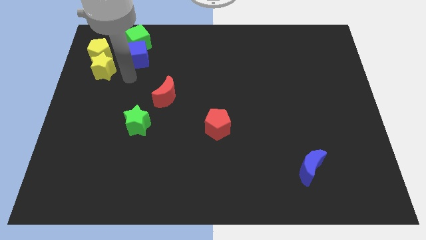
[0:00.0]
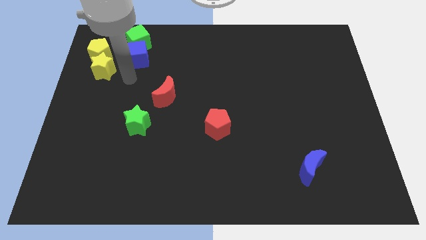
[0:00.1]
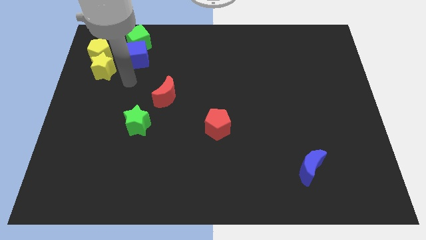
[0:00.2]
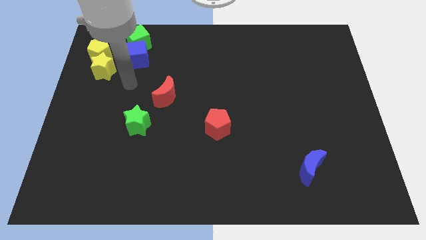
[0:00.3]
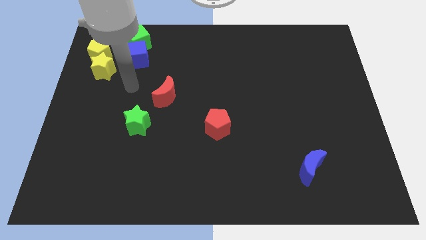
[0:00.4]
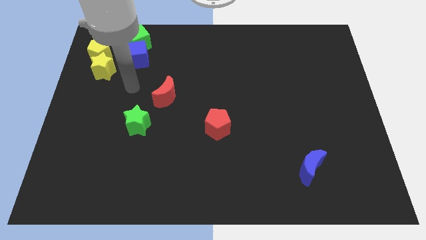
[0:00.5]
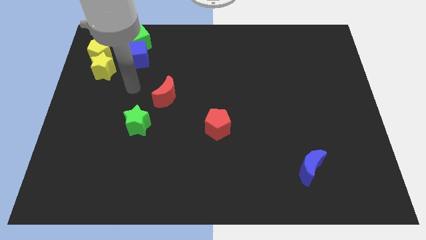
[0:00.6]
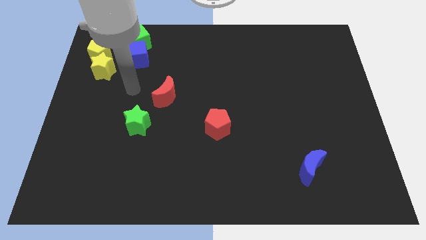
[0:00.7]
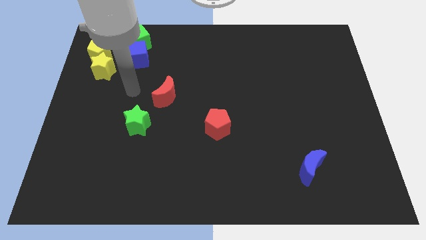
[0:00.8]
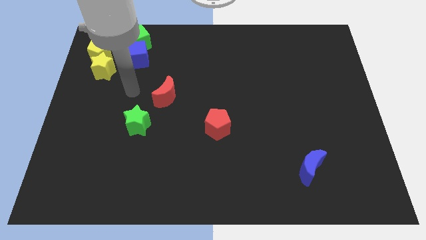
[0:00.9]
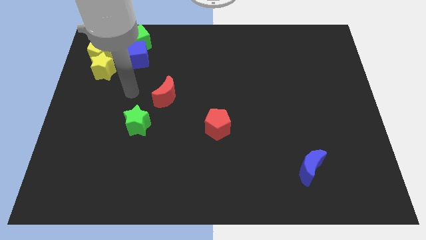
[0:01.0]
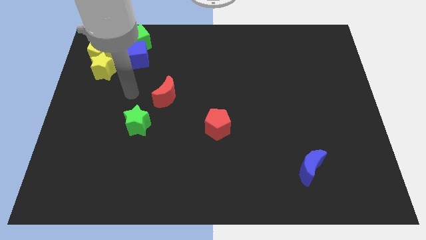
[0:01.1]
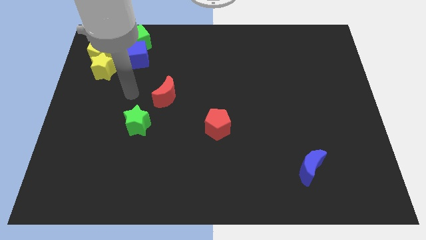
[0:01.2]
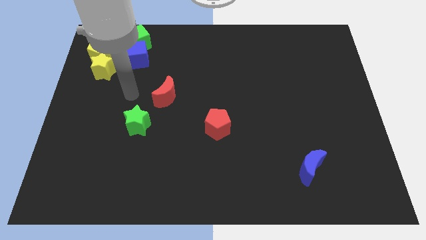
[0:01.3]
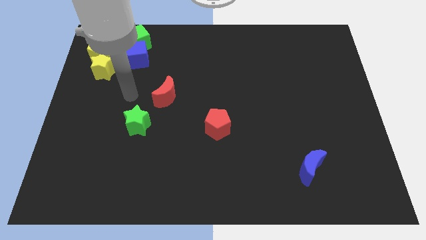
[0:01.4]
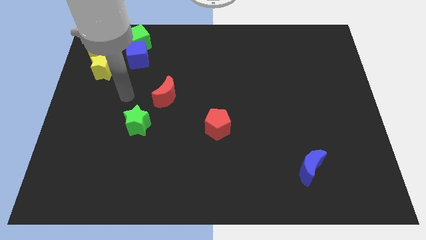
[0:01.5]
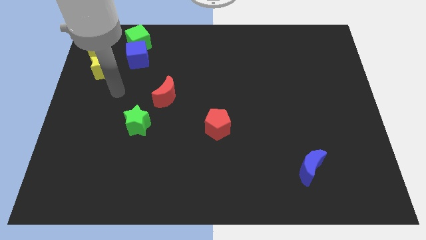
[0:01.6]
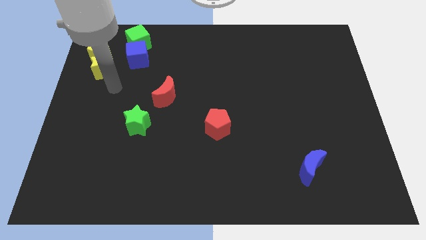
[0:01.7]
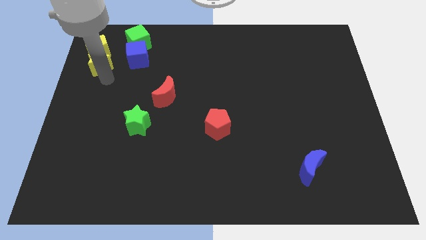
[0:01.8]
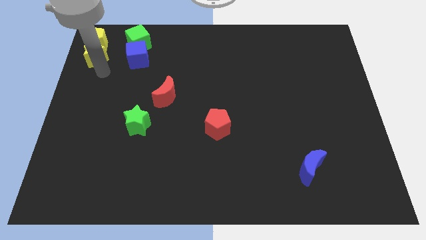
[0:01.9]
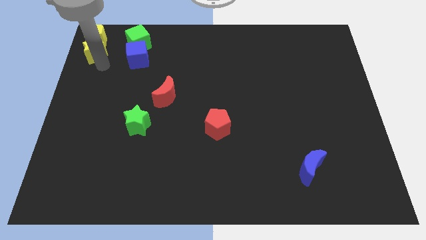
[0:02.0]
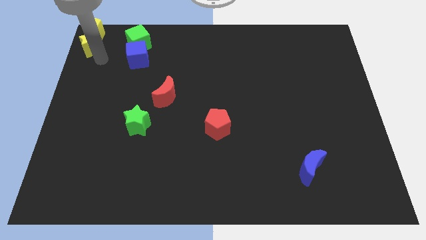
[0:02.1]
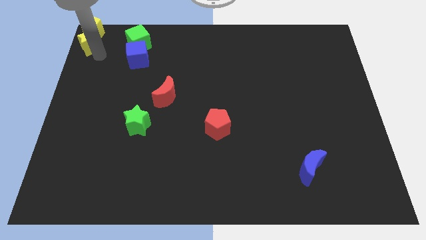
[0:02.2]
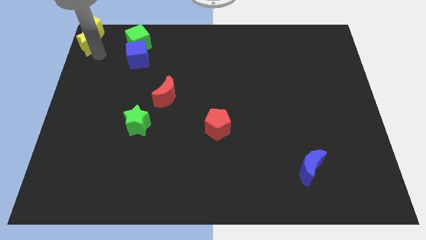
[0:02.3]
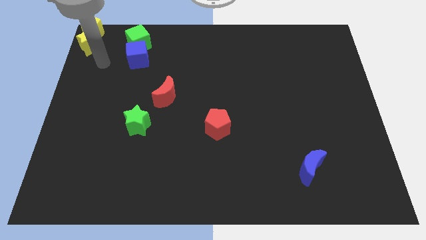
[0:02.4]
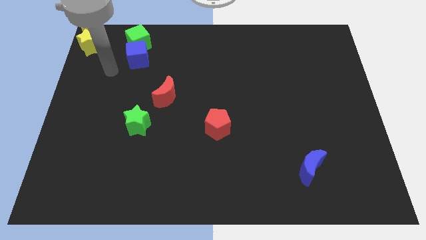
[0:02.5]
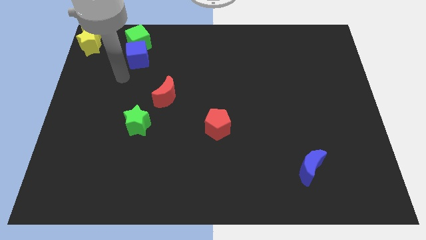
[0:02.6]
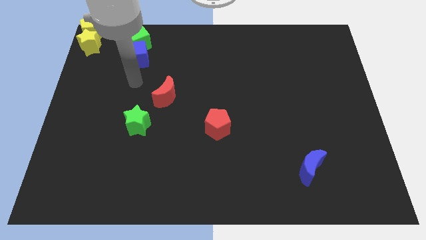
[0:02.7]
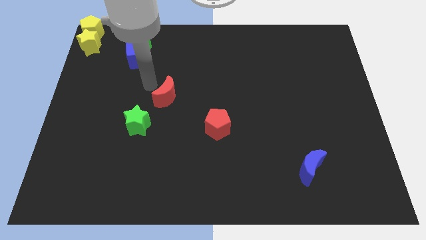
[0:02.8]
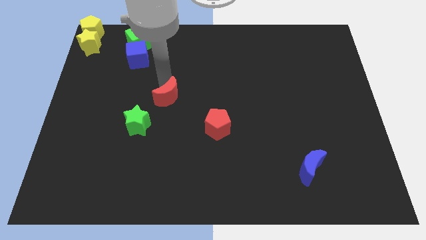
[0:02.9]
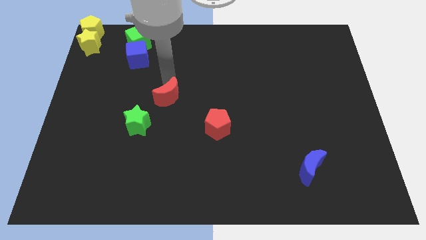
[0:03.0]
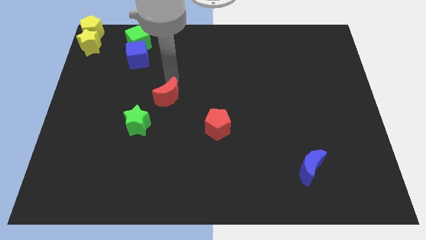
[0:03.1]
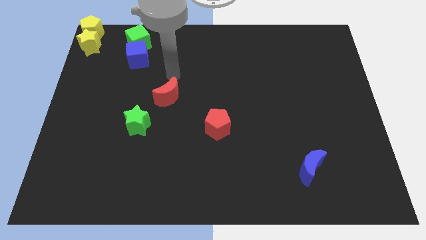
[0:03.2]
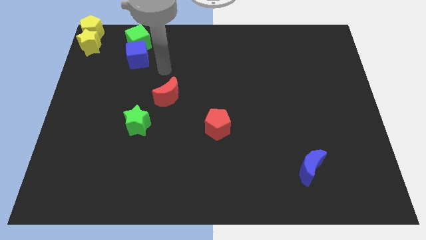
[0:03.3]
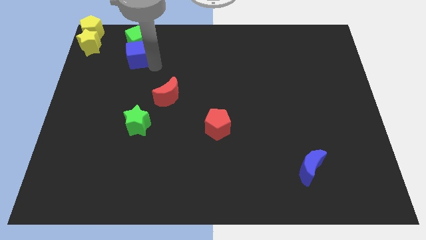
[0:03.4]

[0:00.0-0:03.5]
push the yellow star and yellow pentagon to the top left corner of the board

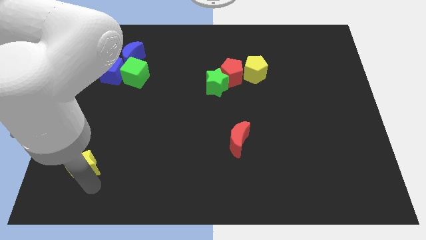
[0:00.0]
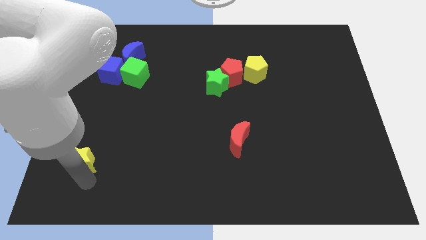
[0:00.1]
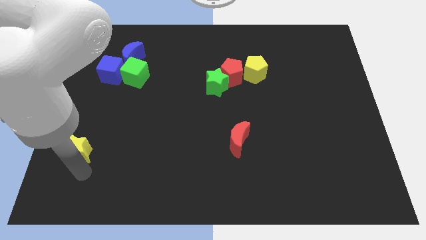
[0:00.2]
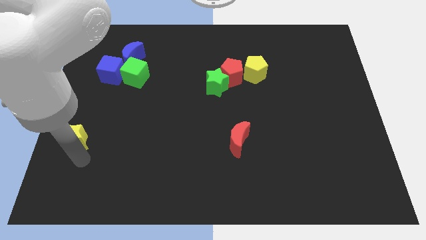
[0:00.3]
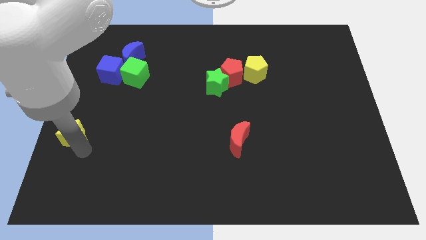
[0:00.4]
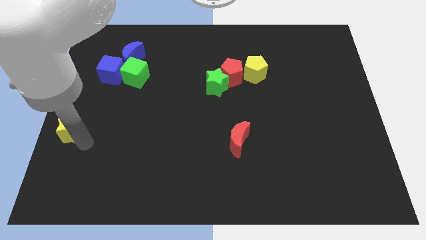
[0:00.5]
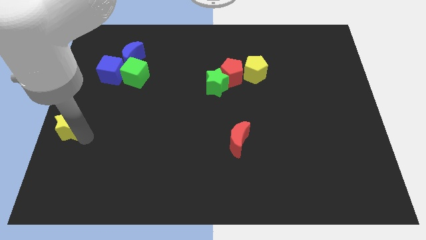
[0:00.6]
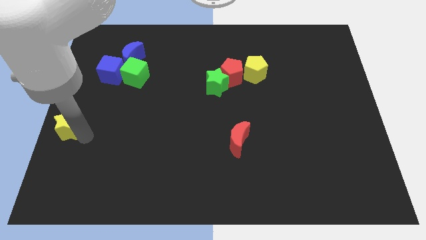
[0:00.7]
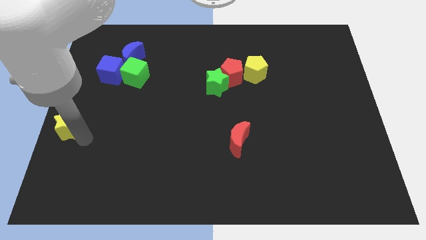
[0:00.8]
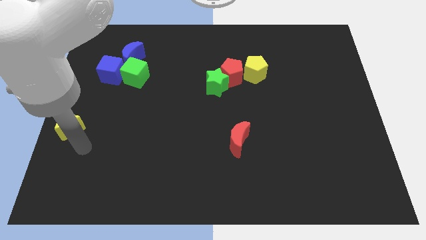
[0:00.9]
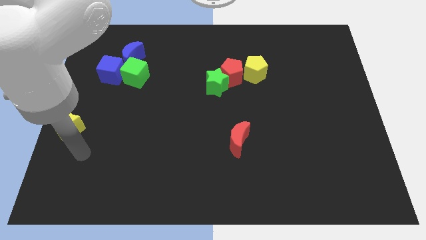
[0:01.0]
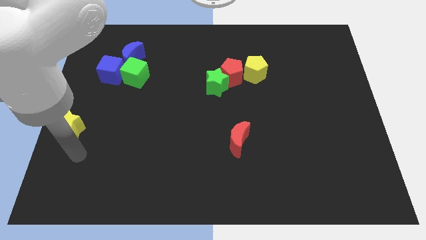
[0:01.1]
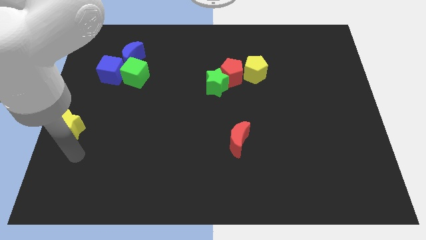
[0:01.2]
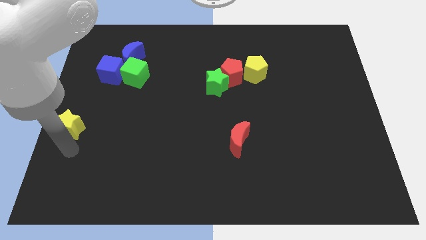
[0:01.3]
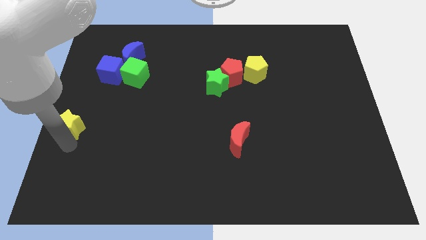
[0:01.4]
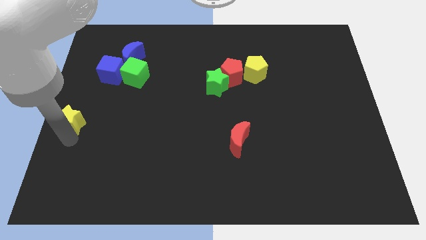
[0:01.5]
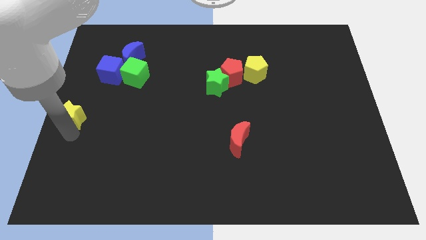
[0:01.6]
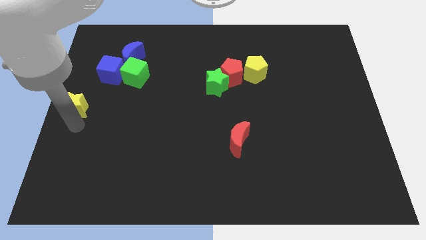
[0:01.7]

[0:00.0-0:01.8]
push the yellow star to the center left of the board

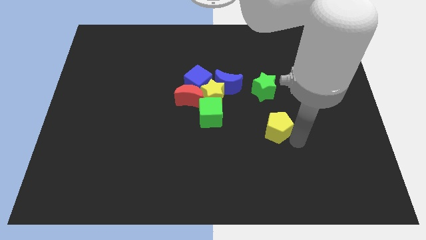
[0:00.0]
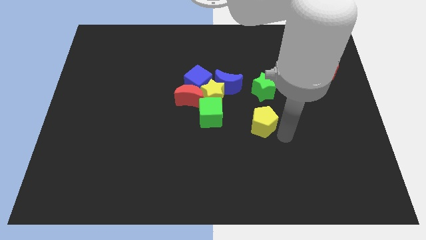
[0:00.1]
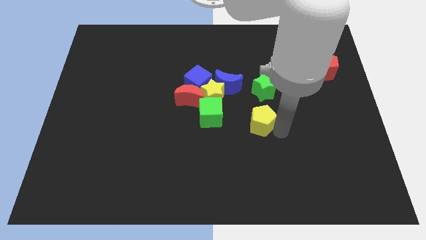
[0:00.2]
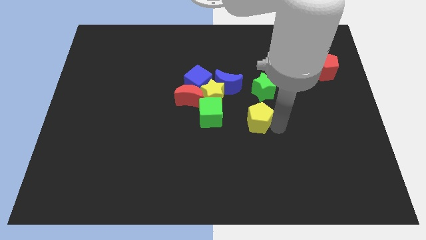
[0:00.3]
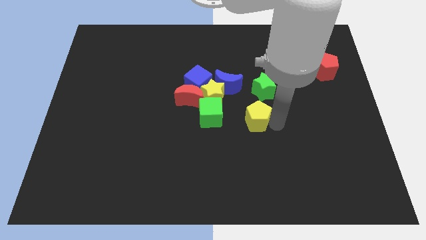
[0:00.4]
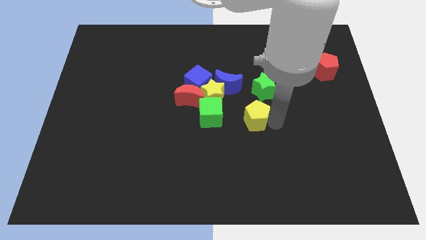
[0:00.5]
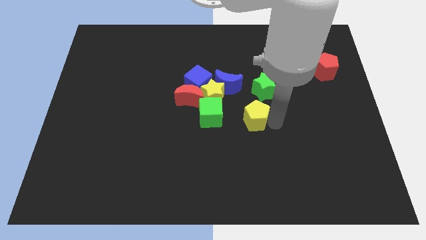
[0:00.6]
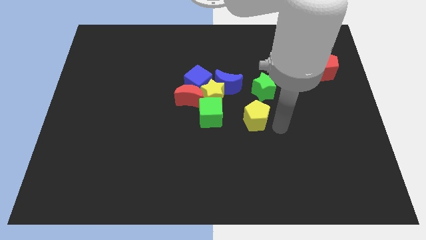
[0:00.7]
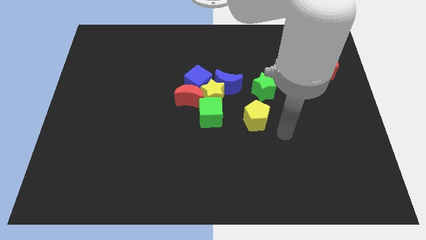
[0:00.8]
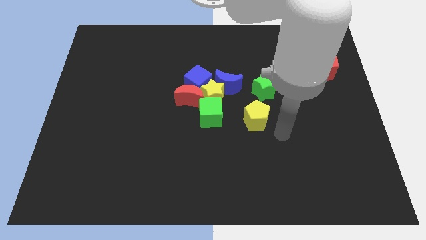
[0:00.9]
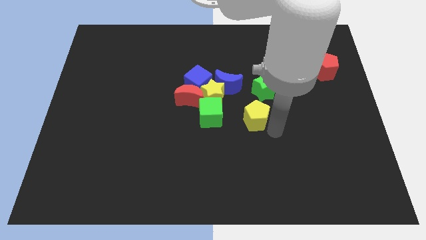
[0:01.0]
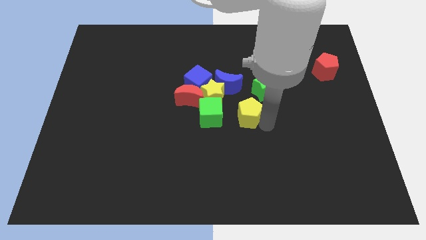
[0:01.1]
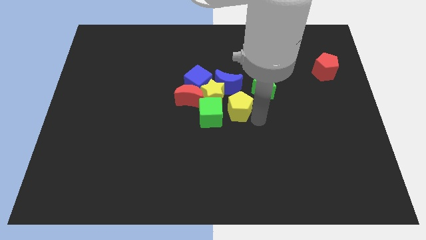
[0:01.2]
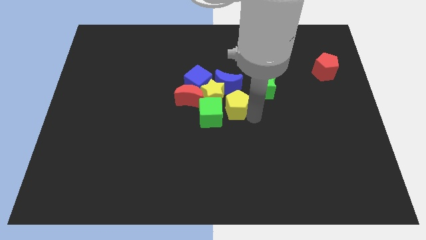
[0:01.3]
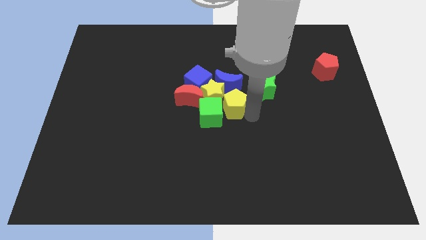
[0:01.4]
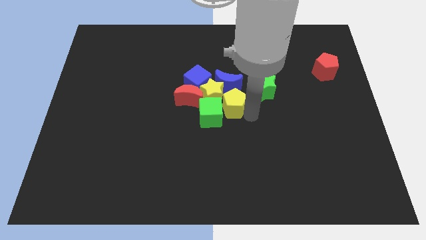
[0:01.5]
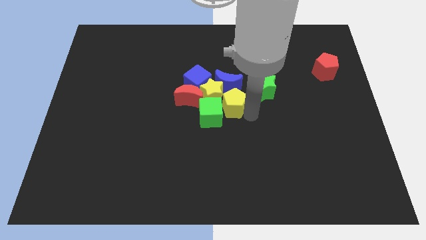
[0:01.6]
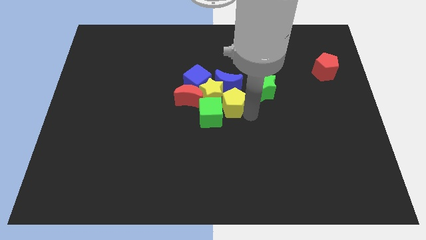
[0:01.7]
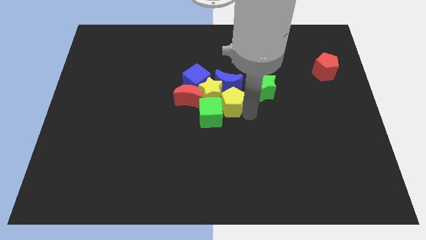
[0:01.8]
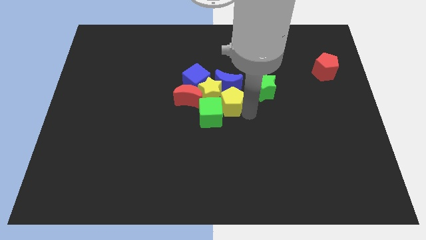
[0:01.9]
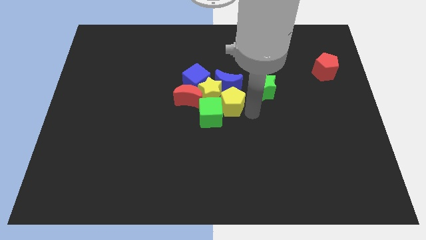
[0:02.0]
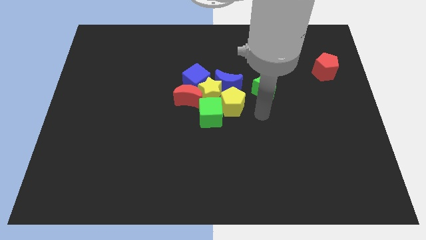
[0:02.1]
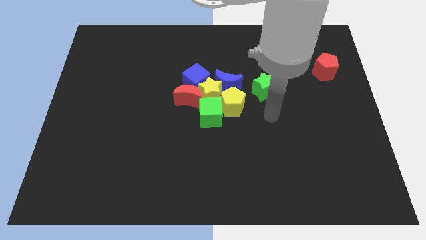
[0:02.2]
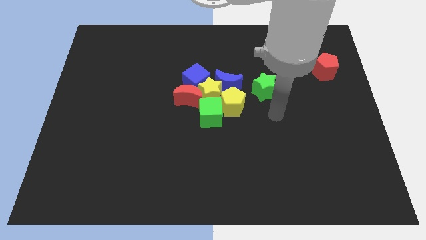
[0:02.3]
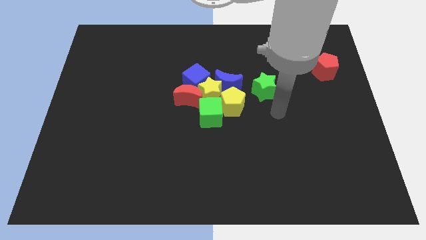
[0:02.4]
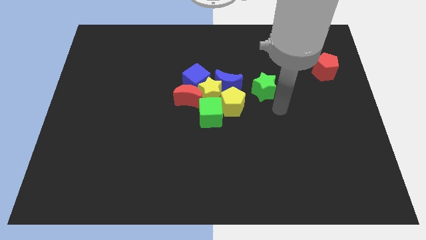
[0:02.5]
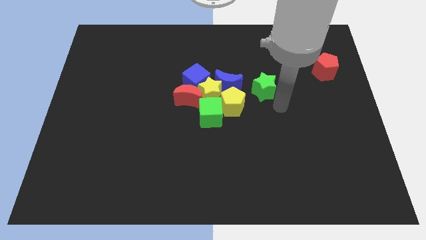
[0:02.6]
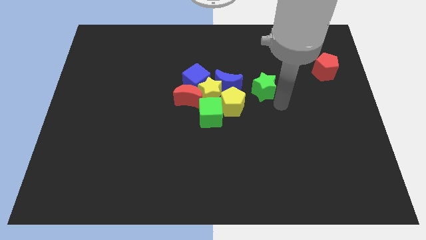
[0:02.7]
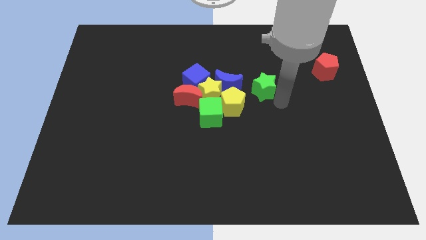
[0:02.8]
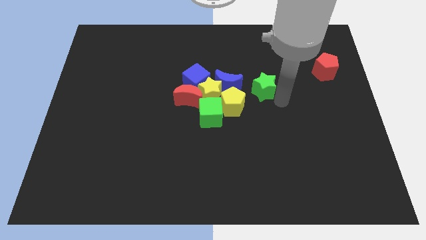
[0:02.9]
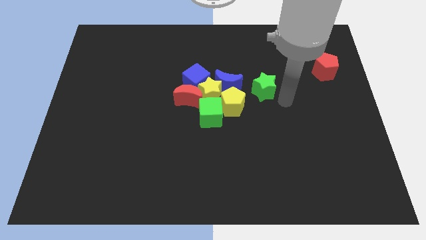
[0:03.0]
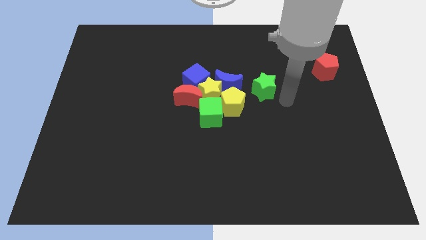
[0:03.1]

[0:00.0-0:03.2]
push the yellow pentagon into the yellow star

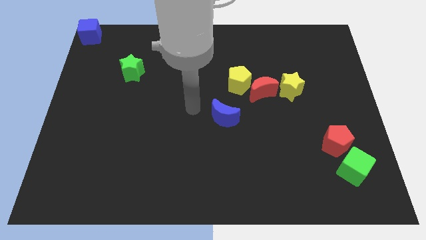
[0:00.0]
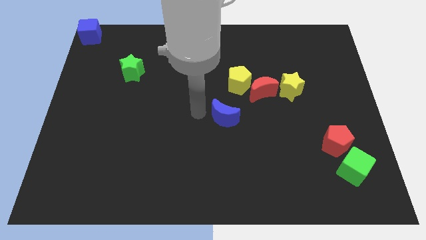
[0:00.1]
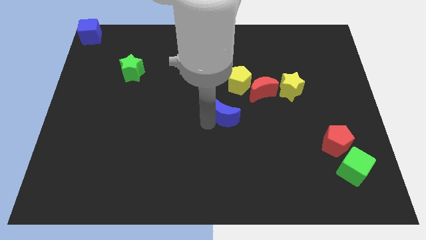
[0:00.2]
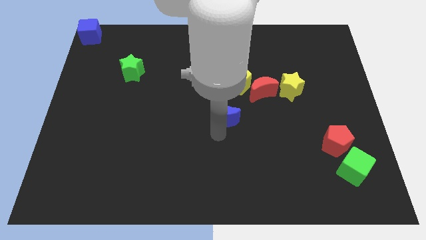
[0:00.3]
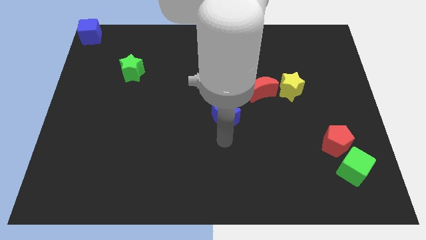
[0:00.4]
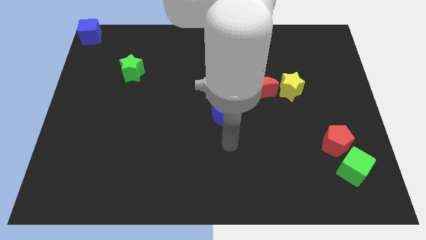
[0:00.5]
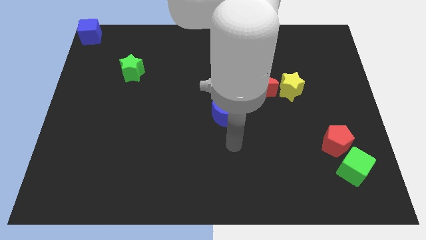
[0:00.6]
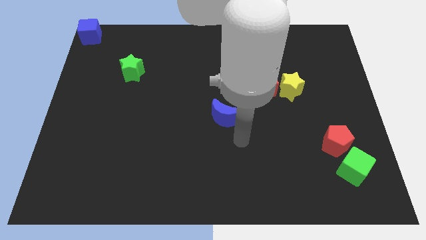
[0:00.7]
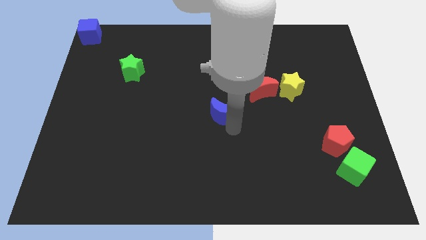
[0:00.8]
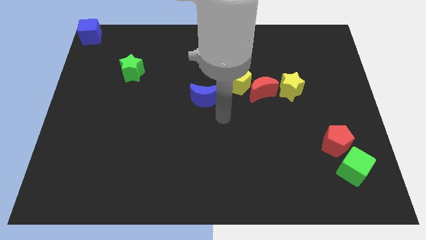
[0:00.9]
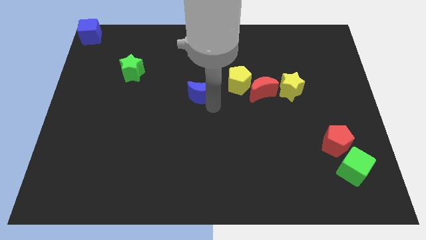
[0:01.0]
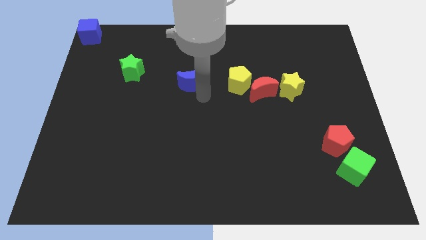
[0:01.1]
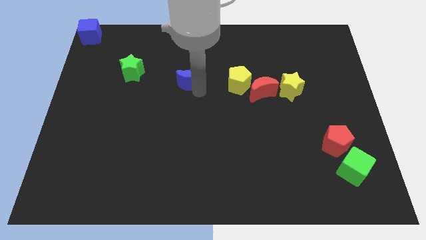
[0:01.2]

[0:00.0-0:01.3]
push the blue crescent to the left of the yellow pentagon
